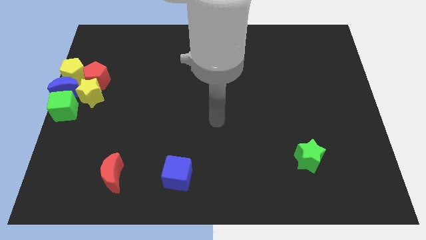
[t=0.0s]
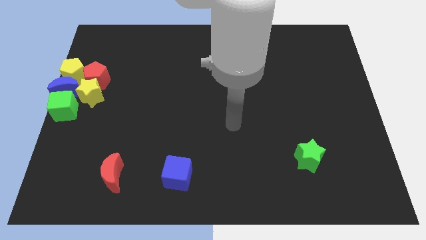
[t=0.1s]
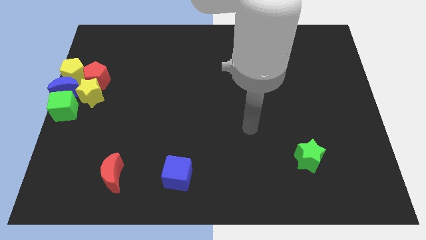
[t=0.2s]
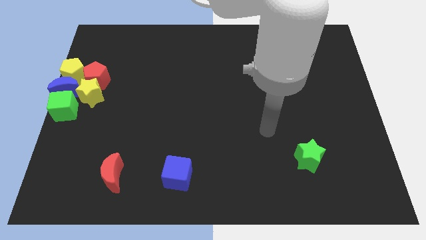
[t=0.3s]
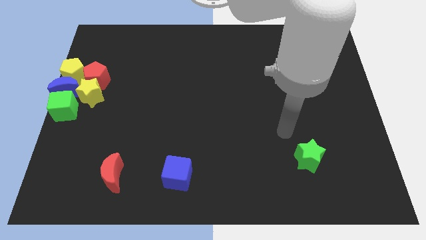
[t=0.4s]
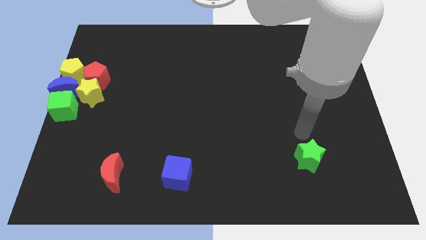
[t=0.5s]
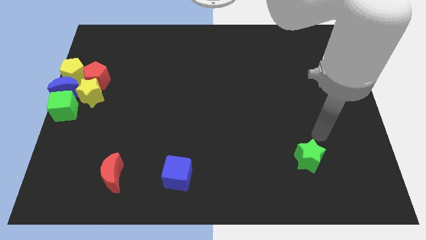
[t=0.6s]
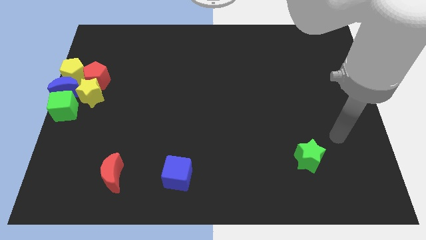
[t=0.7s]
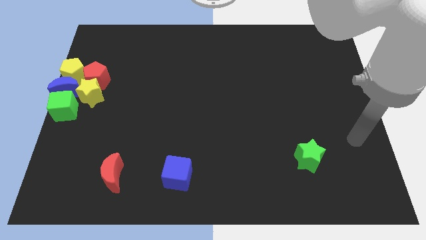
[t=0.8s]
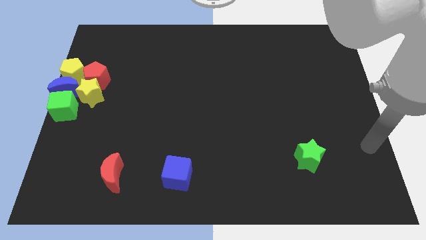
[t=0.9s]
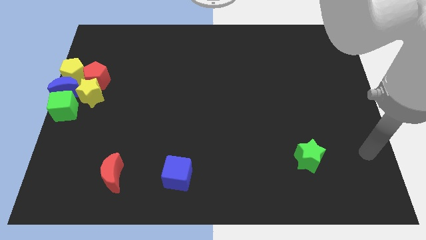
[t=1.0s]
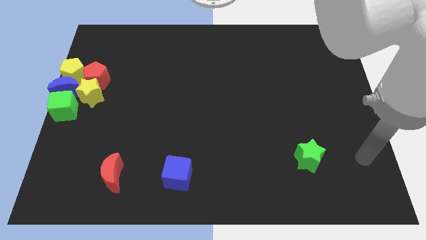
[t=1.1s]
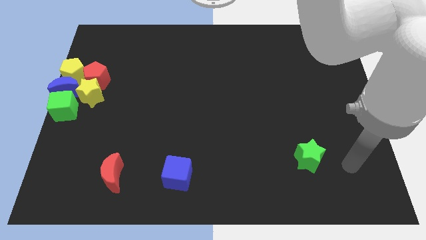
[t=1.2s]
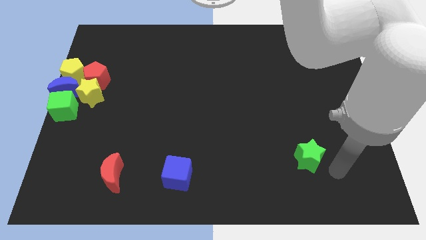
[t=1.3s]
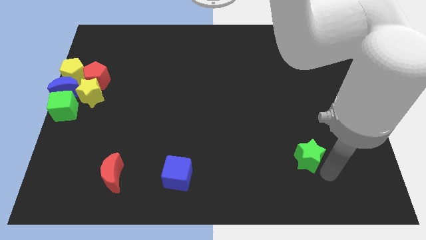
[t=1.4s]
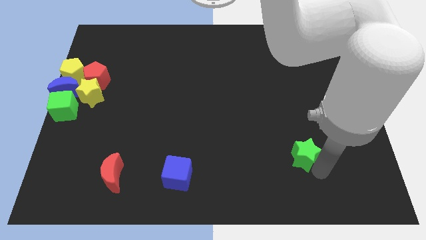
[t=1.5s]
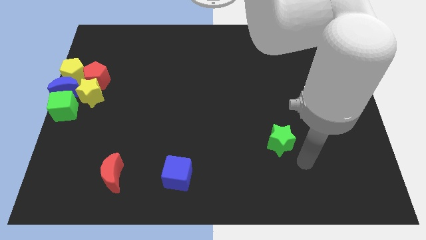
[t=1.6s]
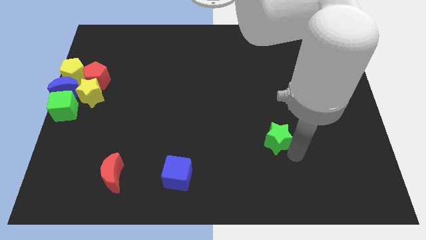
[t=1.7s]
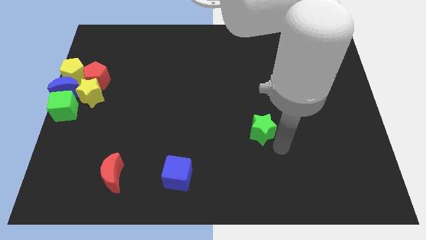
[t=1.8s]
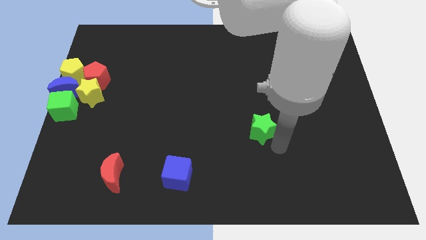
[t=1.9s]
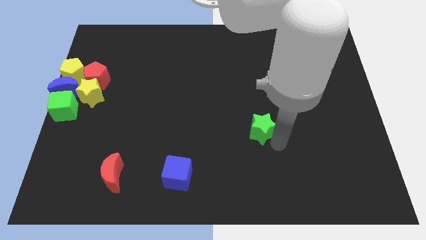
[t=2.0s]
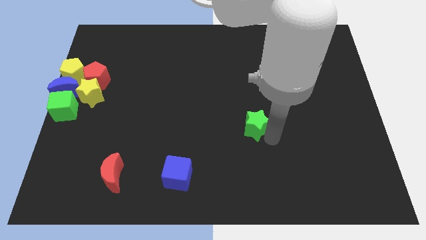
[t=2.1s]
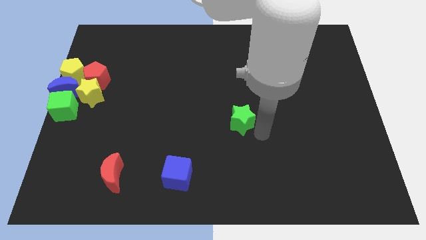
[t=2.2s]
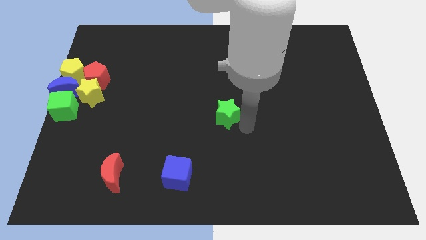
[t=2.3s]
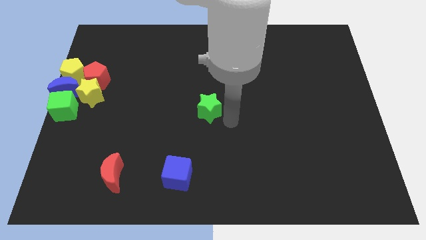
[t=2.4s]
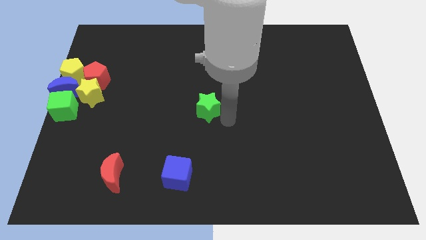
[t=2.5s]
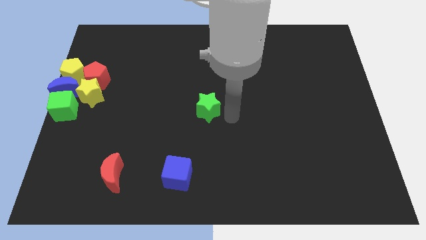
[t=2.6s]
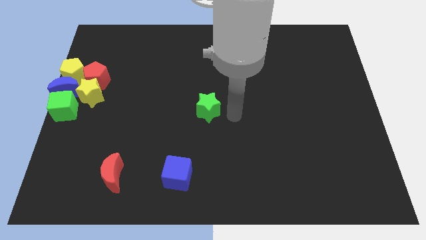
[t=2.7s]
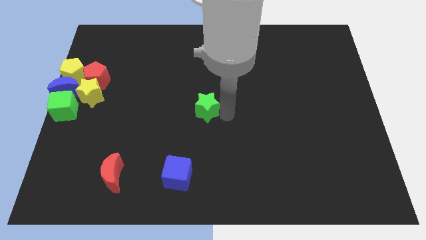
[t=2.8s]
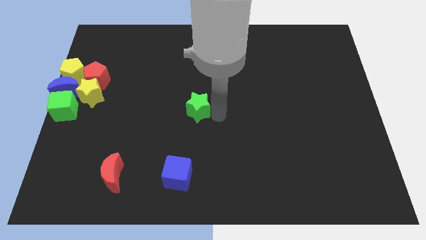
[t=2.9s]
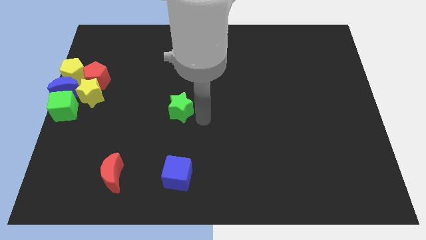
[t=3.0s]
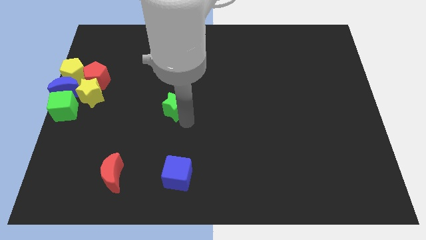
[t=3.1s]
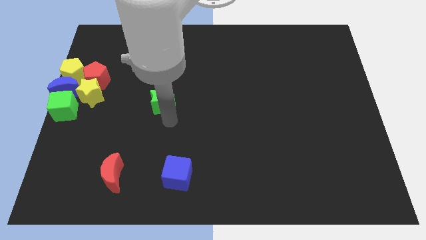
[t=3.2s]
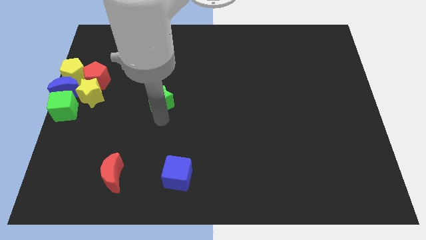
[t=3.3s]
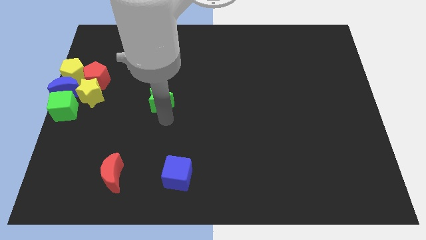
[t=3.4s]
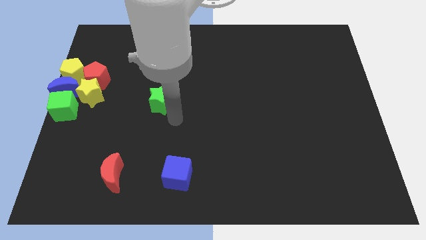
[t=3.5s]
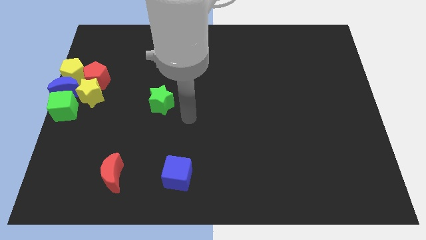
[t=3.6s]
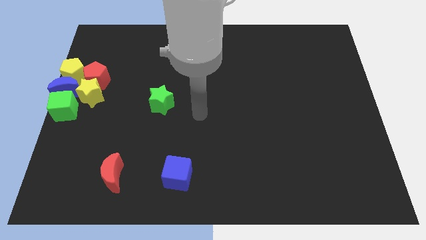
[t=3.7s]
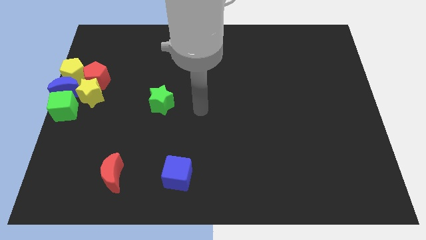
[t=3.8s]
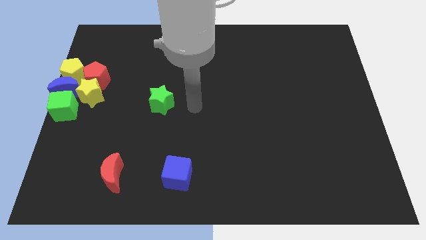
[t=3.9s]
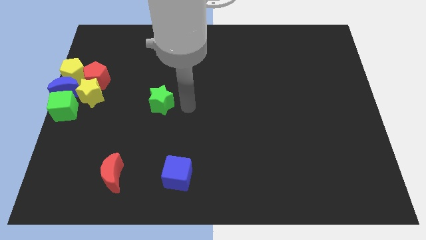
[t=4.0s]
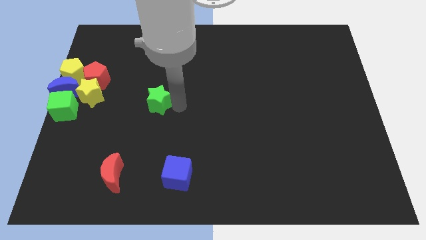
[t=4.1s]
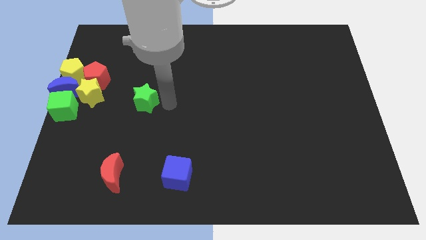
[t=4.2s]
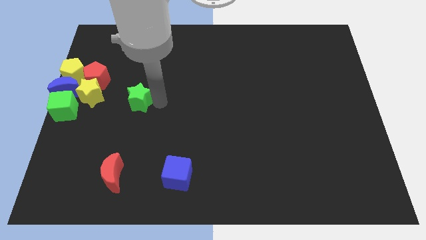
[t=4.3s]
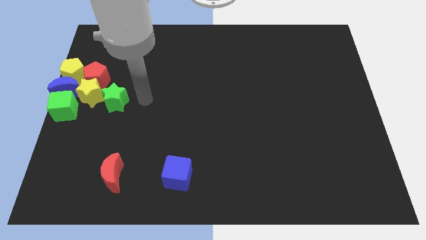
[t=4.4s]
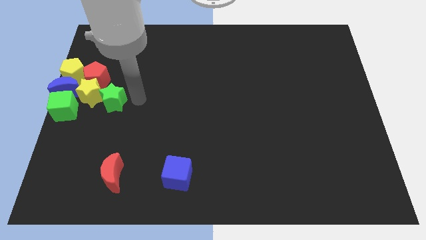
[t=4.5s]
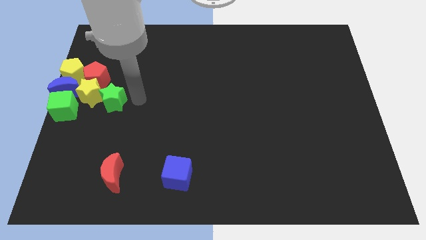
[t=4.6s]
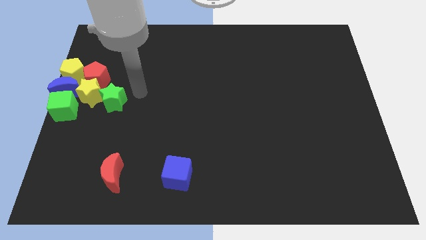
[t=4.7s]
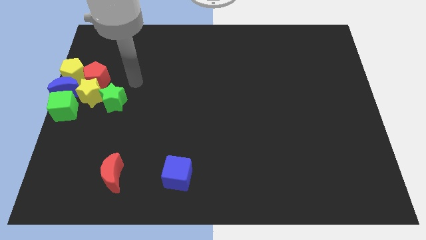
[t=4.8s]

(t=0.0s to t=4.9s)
place the green star to the right side of the yellow star

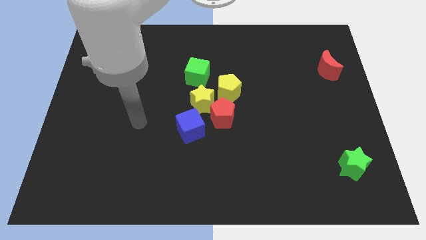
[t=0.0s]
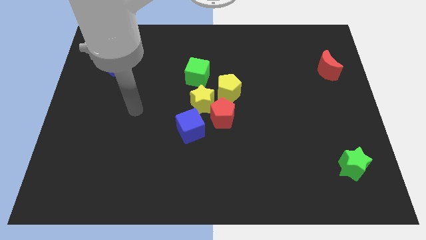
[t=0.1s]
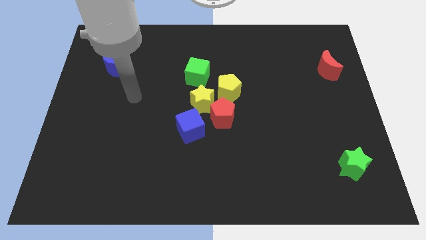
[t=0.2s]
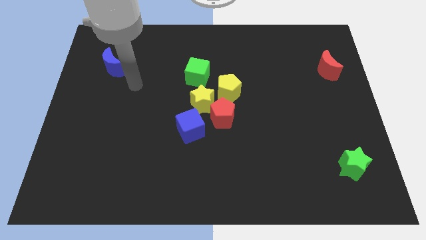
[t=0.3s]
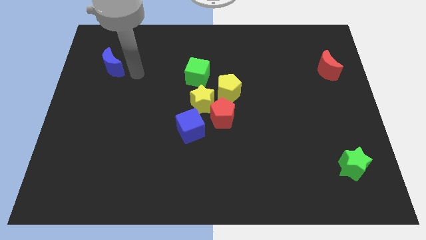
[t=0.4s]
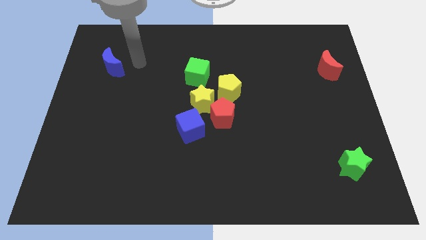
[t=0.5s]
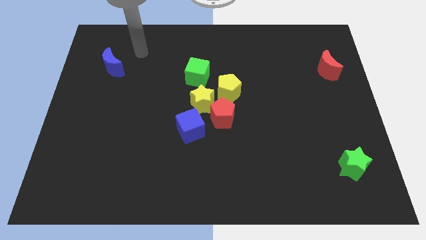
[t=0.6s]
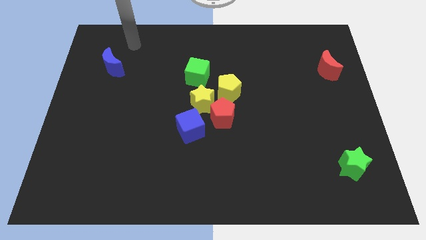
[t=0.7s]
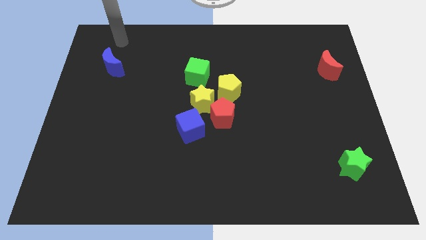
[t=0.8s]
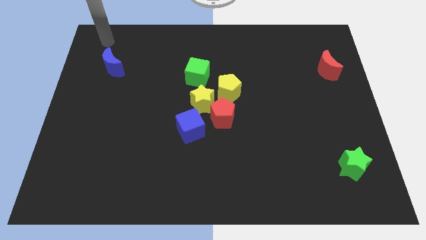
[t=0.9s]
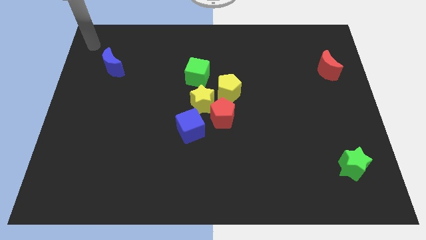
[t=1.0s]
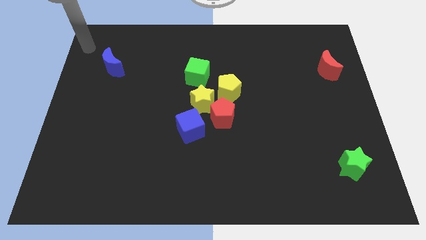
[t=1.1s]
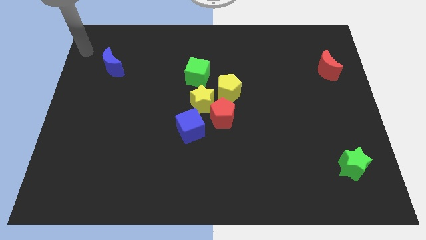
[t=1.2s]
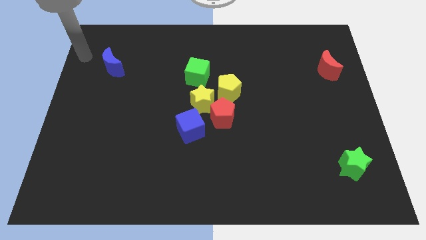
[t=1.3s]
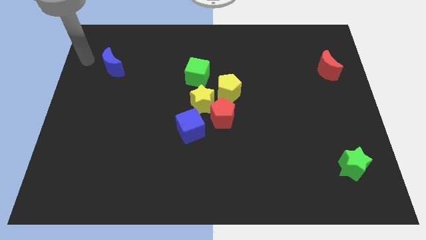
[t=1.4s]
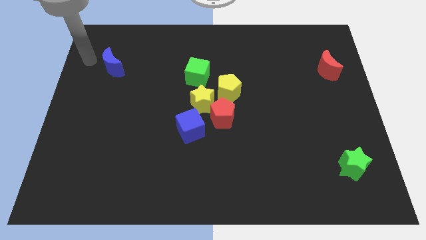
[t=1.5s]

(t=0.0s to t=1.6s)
point your arm at the left of the blue crescent

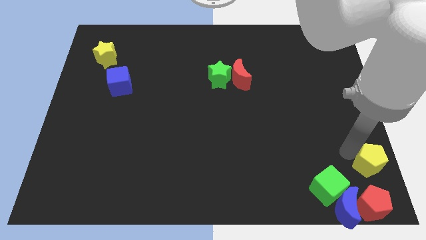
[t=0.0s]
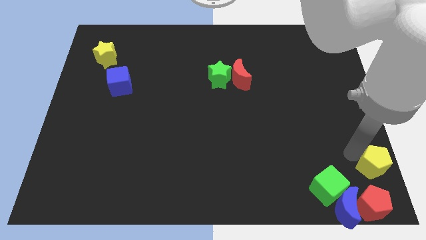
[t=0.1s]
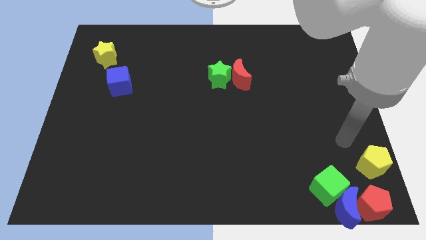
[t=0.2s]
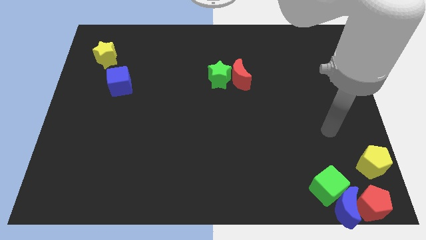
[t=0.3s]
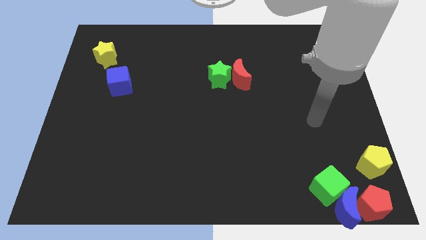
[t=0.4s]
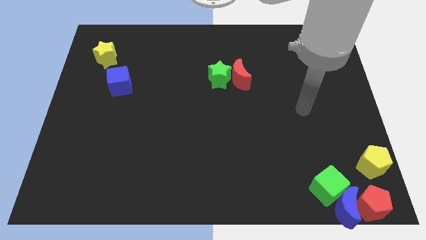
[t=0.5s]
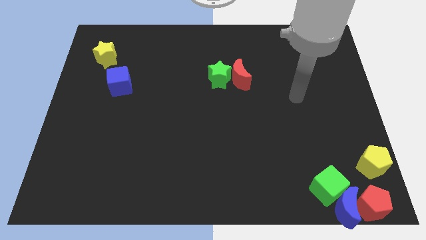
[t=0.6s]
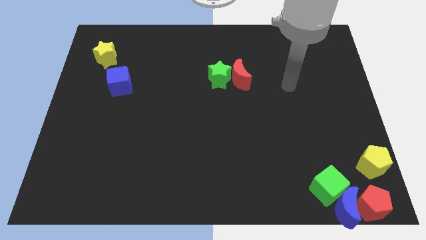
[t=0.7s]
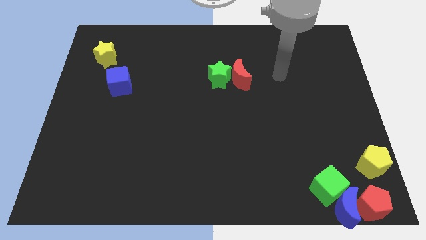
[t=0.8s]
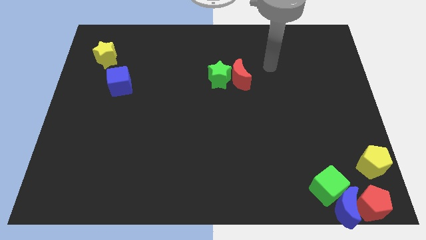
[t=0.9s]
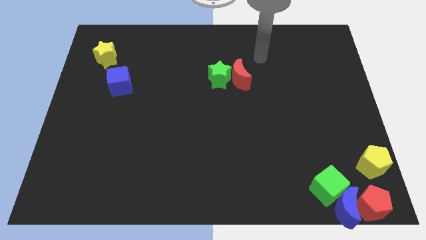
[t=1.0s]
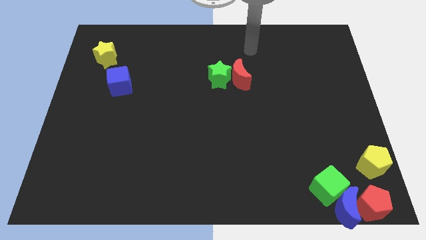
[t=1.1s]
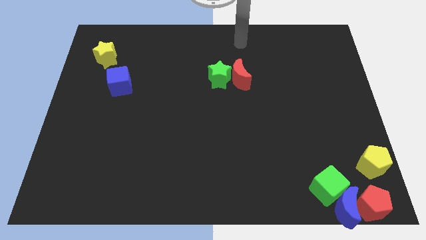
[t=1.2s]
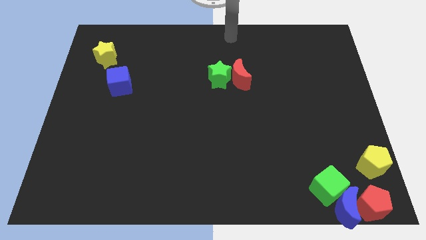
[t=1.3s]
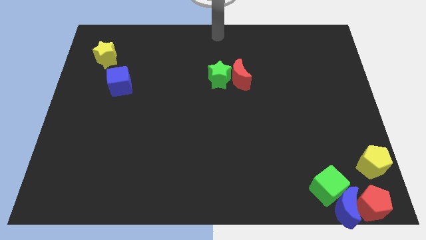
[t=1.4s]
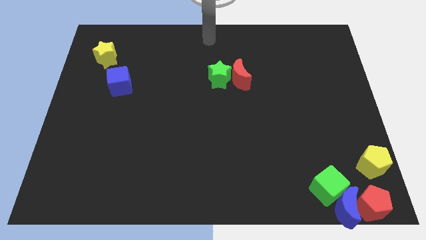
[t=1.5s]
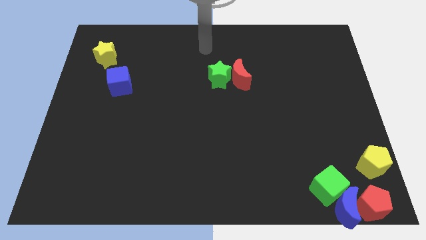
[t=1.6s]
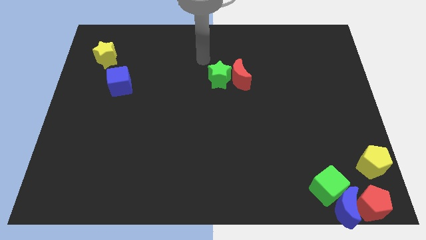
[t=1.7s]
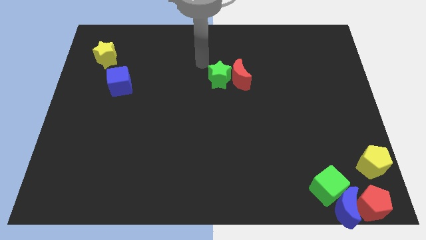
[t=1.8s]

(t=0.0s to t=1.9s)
move your arm away from yellow pentagon

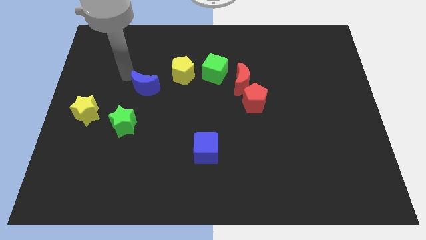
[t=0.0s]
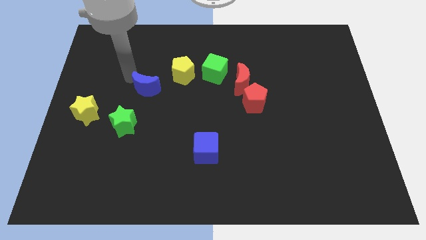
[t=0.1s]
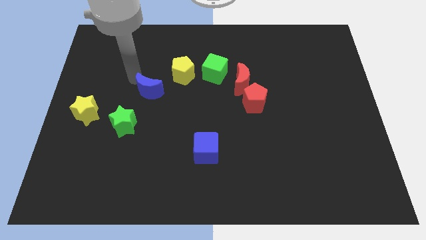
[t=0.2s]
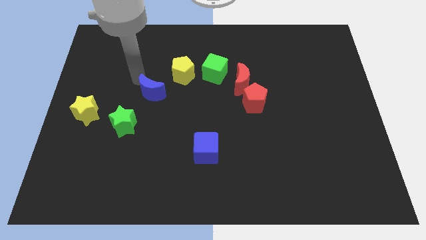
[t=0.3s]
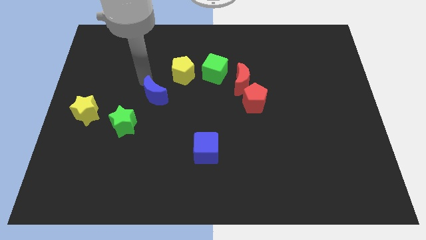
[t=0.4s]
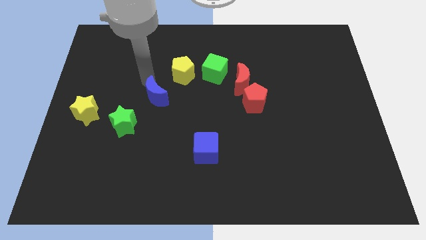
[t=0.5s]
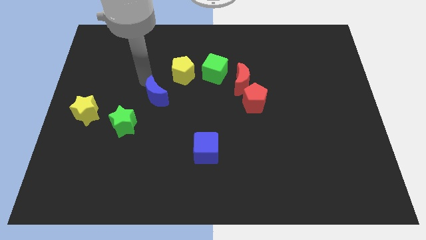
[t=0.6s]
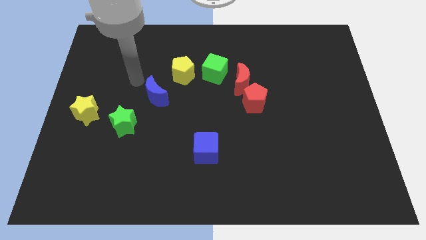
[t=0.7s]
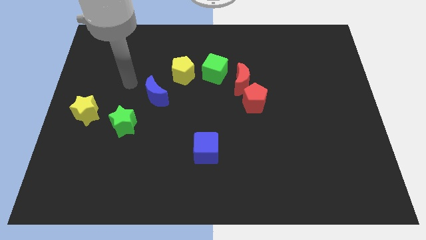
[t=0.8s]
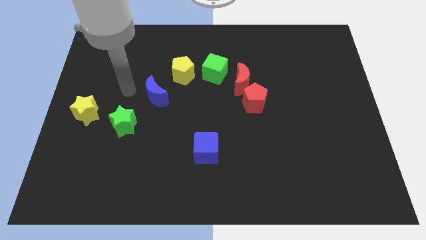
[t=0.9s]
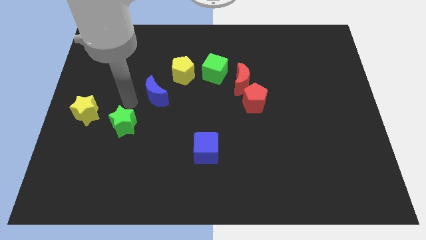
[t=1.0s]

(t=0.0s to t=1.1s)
place the blue crescent in between the green star and the yellow pentagon
